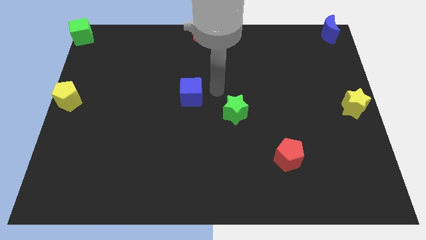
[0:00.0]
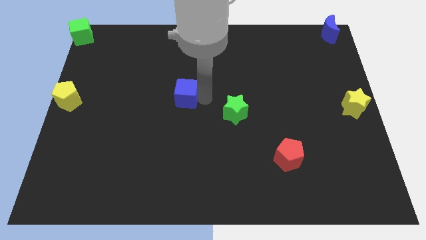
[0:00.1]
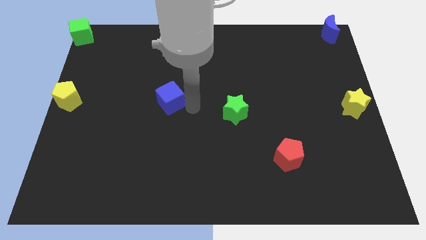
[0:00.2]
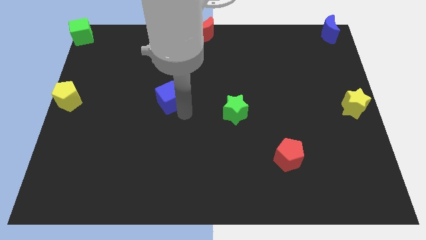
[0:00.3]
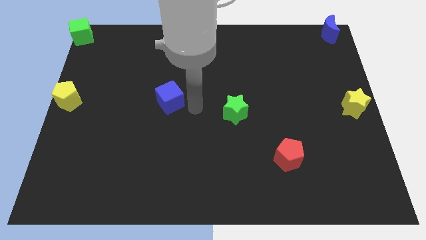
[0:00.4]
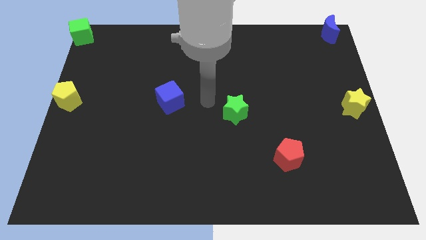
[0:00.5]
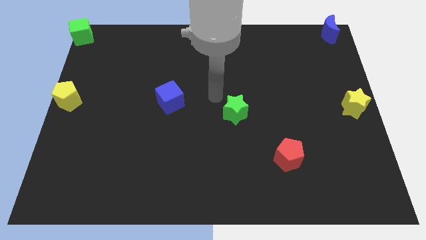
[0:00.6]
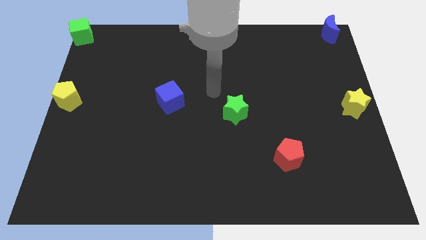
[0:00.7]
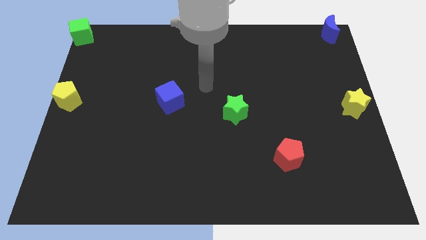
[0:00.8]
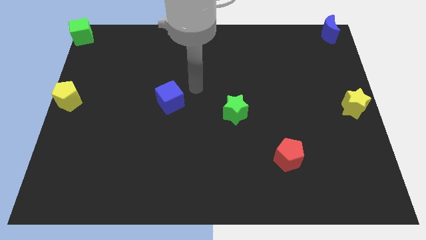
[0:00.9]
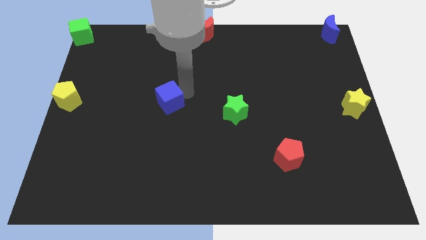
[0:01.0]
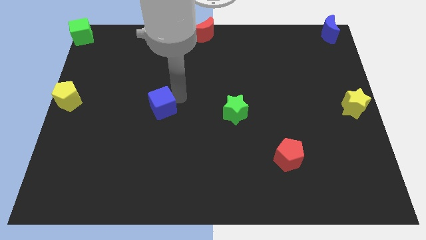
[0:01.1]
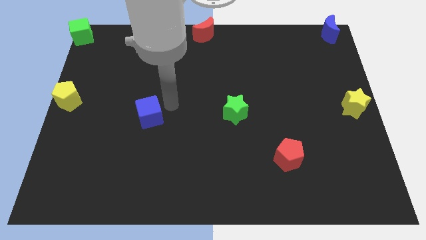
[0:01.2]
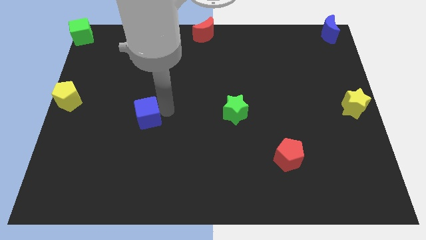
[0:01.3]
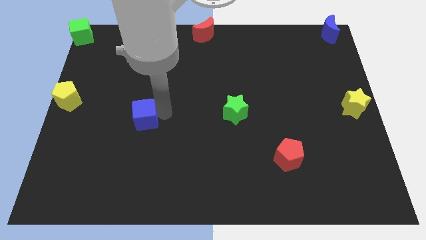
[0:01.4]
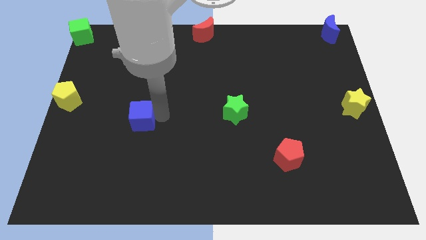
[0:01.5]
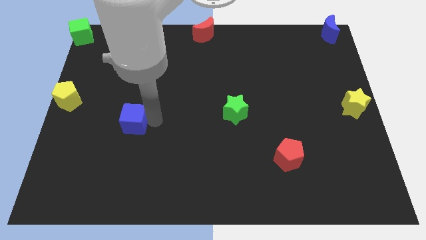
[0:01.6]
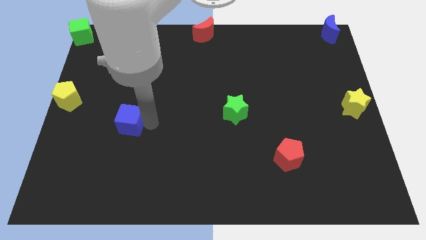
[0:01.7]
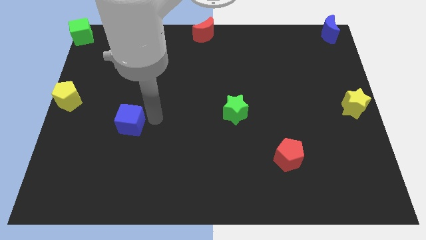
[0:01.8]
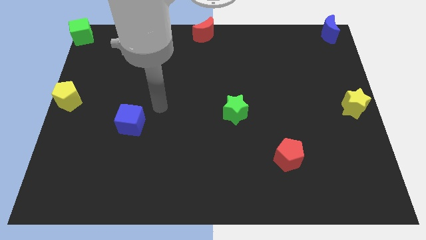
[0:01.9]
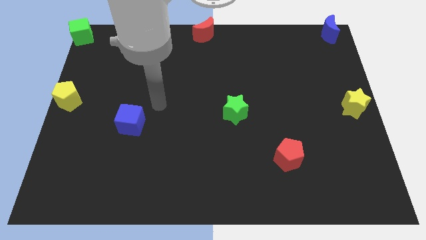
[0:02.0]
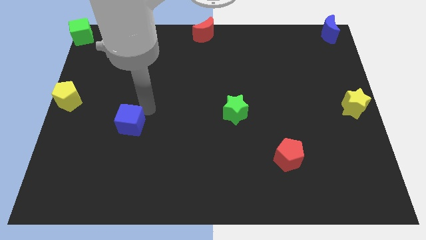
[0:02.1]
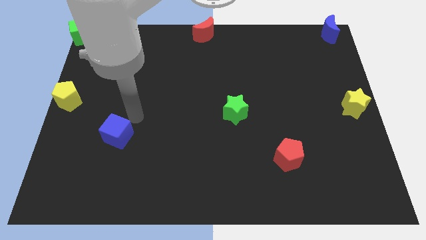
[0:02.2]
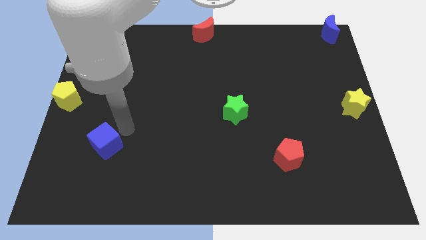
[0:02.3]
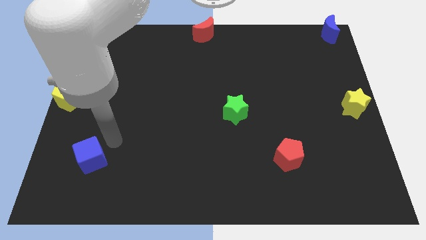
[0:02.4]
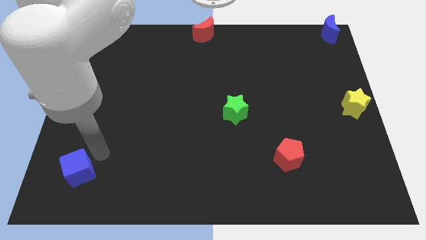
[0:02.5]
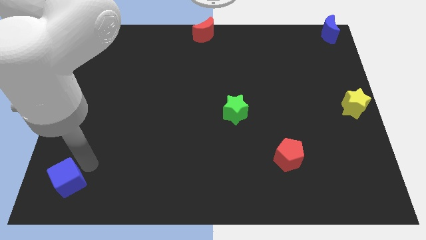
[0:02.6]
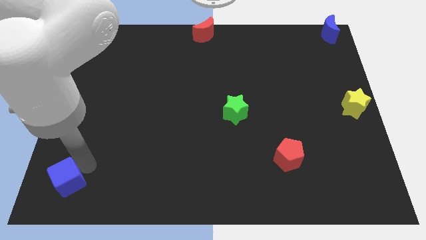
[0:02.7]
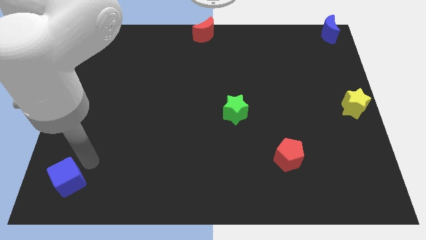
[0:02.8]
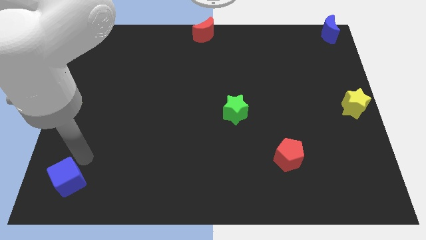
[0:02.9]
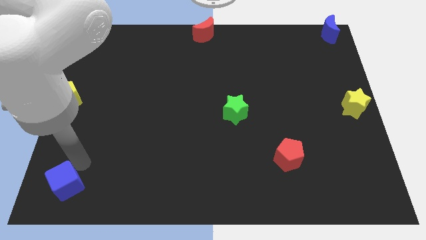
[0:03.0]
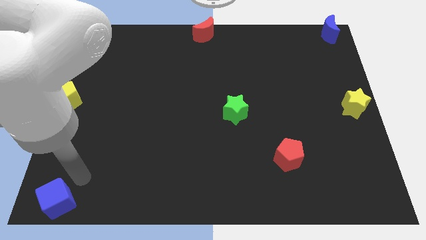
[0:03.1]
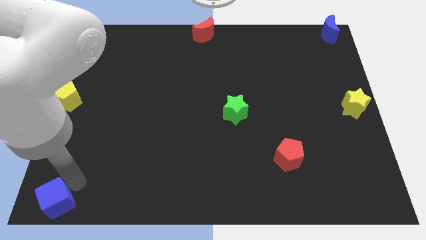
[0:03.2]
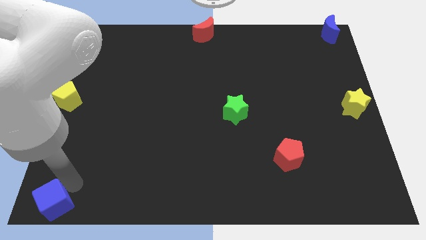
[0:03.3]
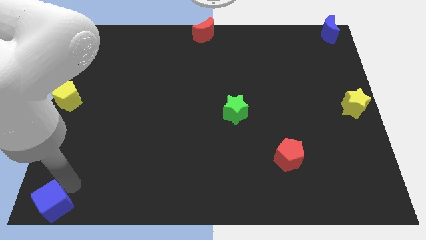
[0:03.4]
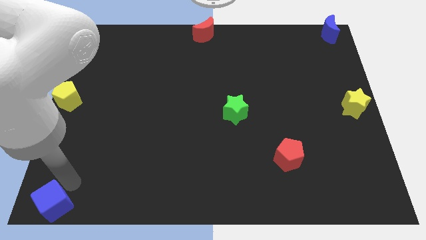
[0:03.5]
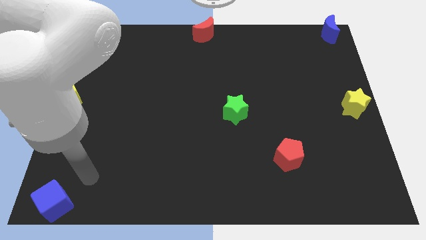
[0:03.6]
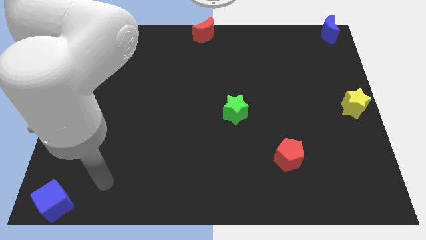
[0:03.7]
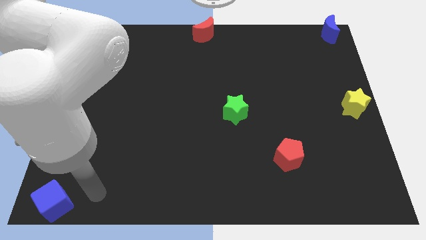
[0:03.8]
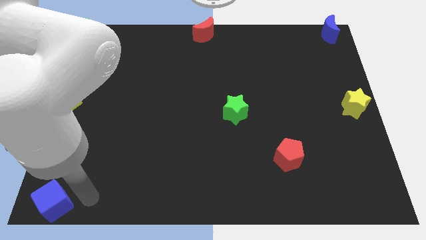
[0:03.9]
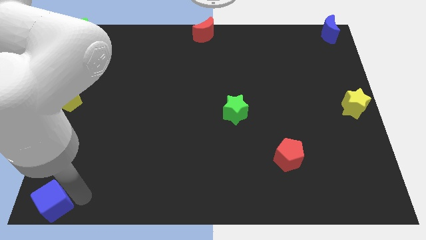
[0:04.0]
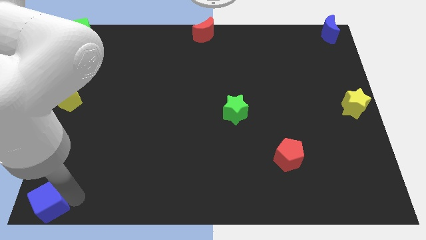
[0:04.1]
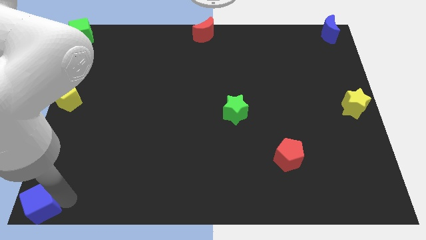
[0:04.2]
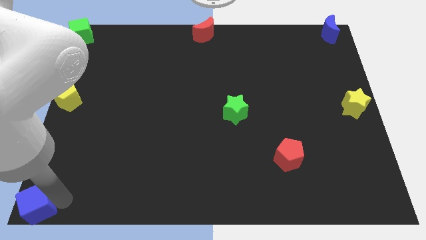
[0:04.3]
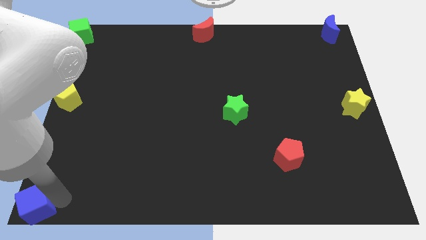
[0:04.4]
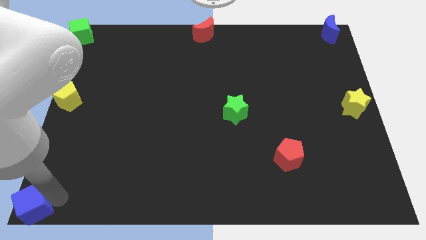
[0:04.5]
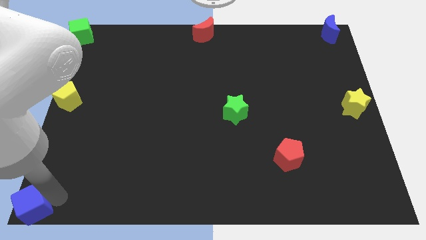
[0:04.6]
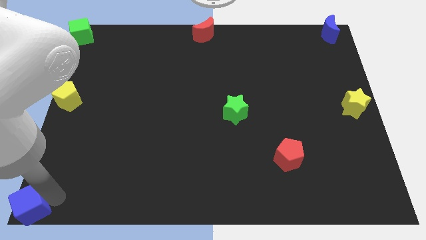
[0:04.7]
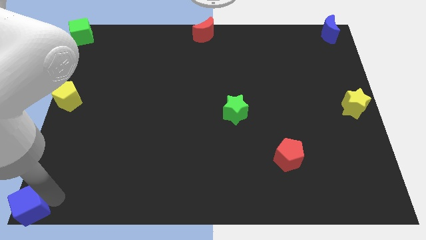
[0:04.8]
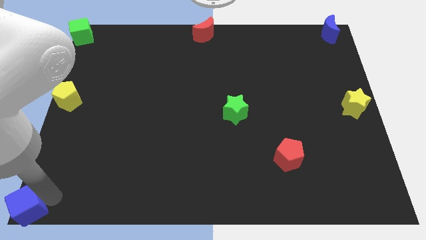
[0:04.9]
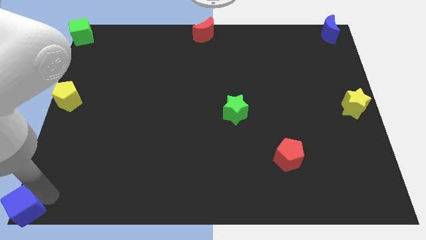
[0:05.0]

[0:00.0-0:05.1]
move blue cube to left corner of the board

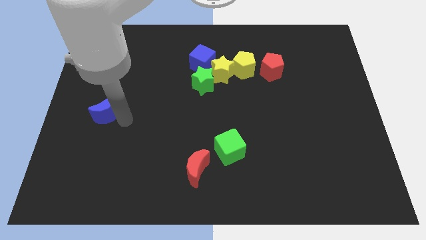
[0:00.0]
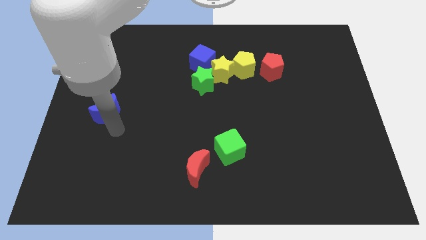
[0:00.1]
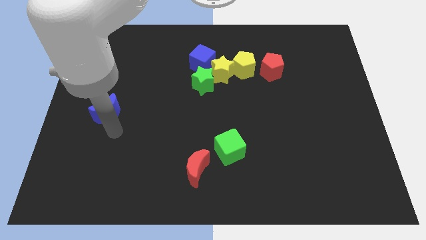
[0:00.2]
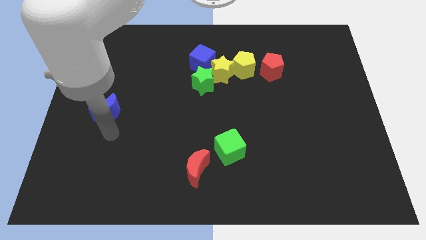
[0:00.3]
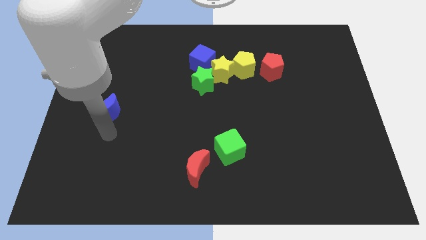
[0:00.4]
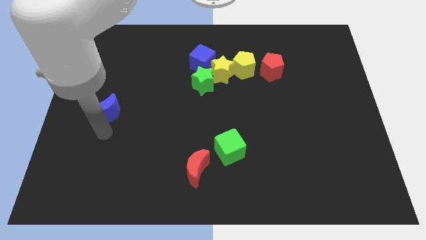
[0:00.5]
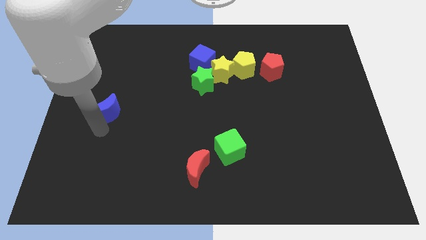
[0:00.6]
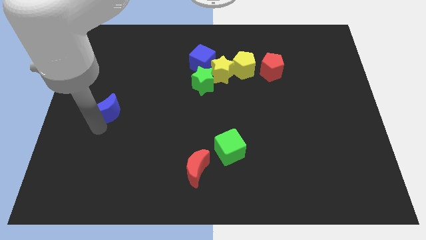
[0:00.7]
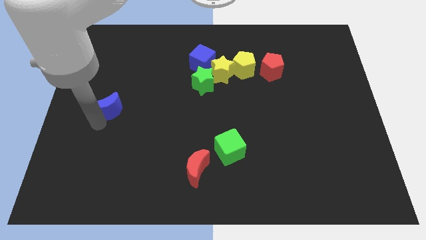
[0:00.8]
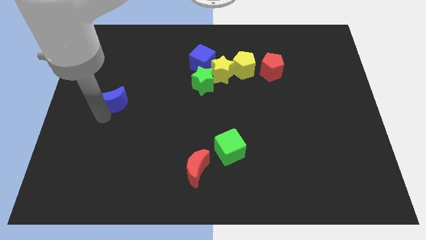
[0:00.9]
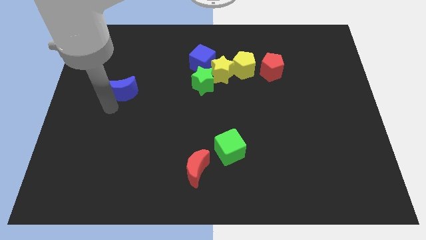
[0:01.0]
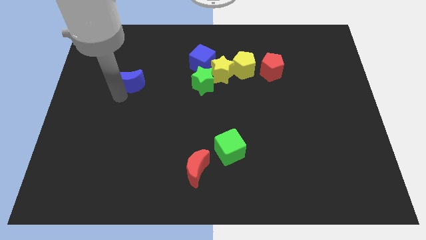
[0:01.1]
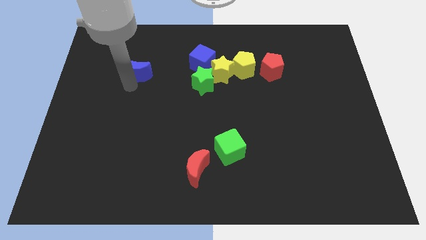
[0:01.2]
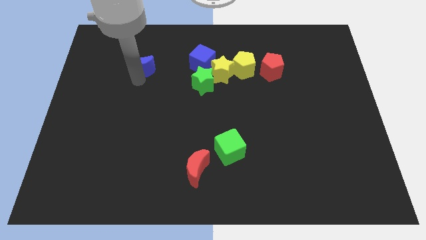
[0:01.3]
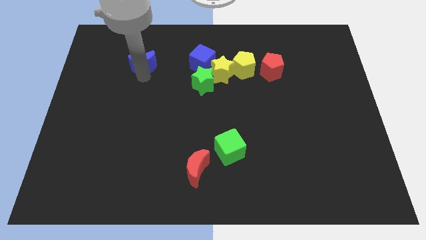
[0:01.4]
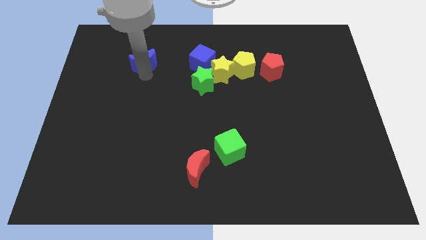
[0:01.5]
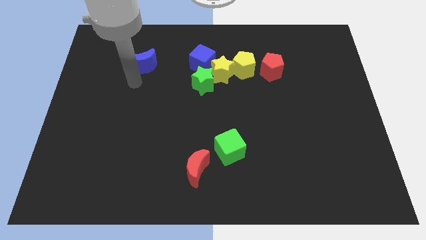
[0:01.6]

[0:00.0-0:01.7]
put the blue crescent to the left side of the blue cube

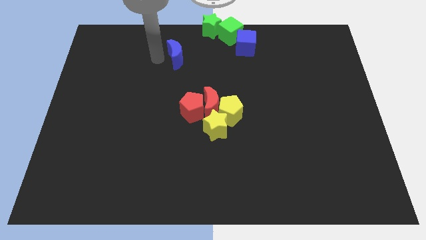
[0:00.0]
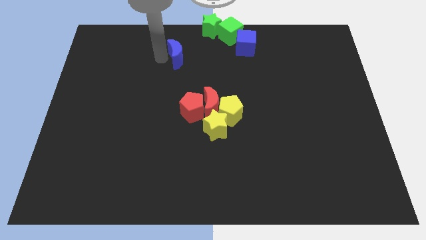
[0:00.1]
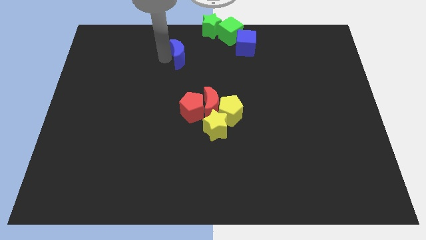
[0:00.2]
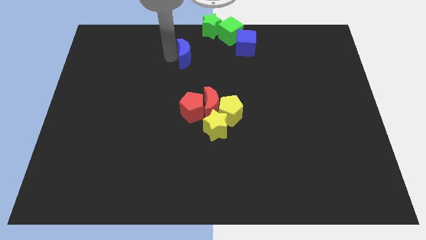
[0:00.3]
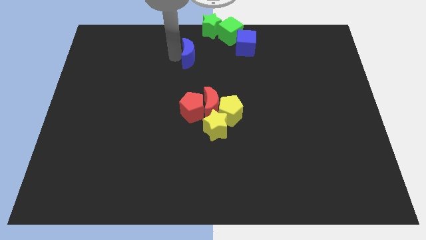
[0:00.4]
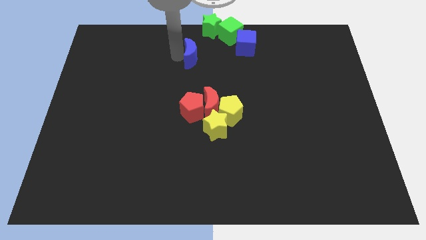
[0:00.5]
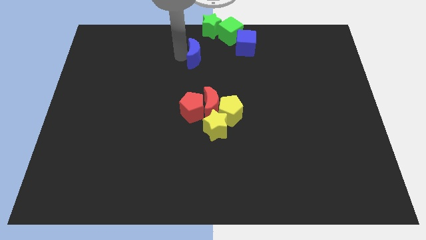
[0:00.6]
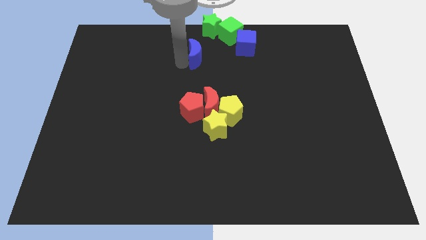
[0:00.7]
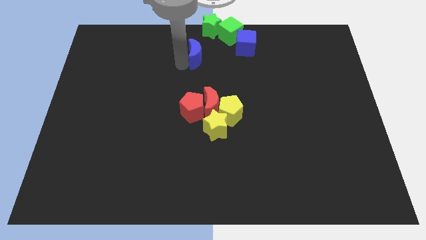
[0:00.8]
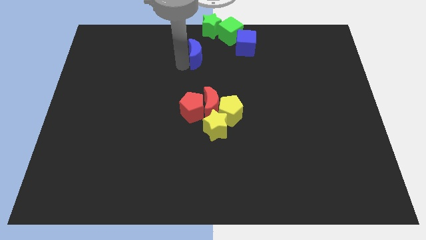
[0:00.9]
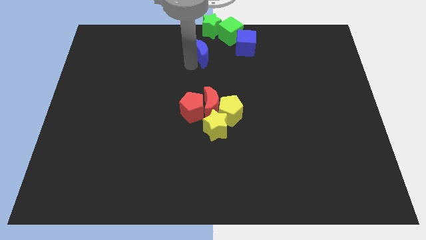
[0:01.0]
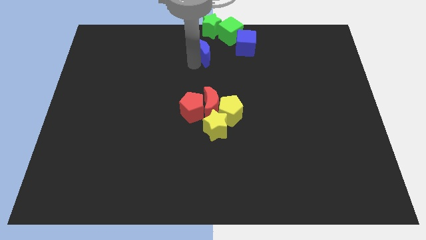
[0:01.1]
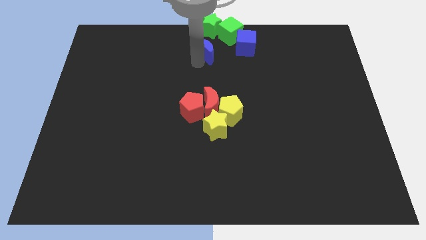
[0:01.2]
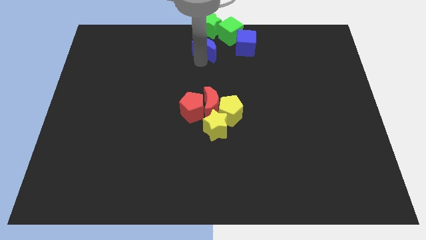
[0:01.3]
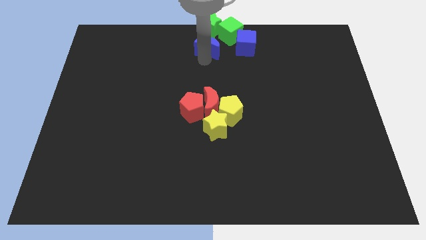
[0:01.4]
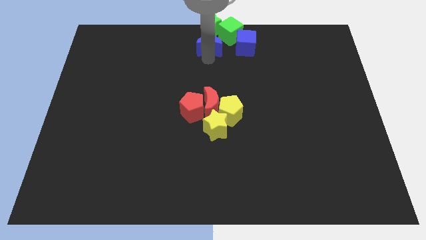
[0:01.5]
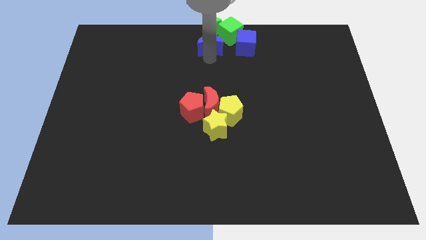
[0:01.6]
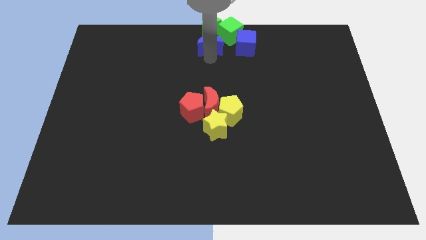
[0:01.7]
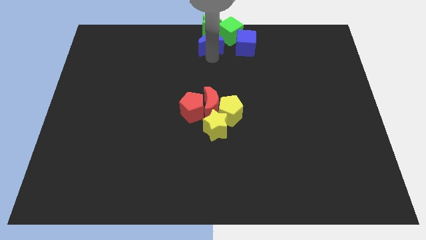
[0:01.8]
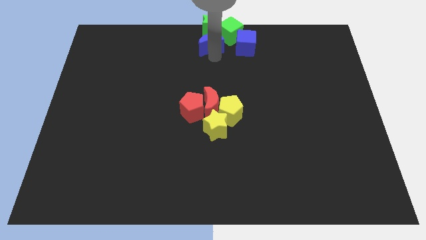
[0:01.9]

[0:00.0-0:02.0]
push the blue crescent below the green star

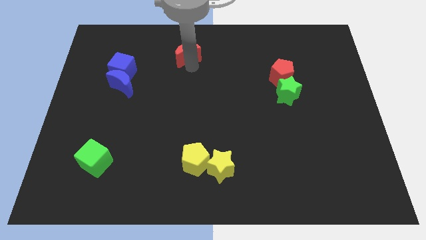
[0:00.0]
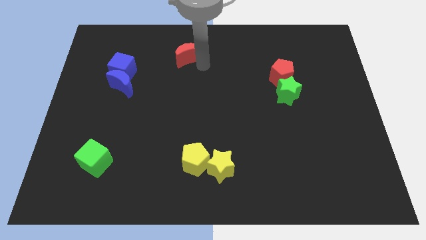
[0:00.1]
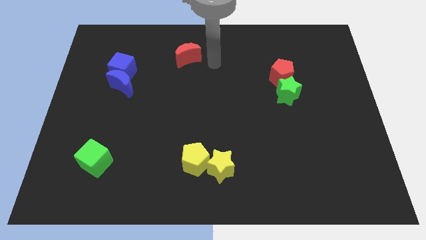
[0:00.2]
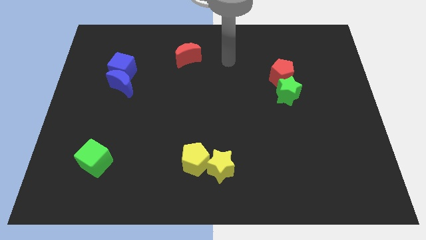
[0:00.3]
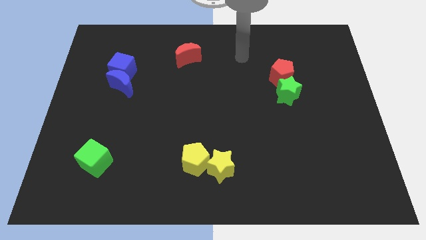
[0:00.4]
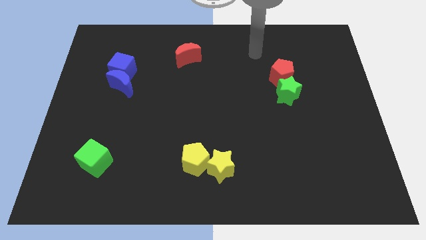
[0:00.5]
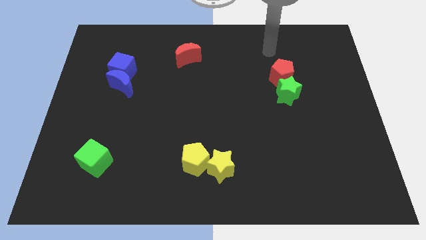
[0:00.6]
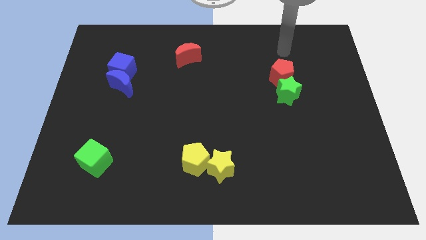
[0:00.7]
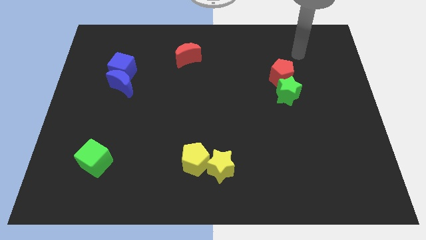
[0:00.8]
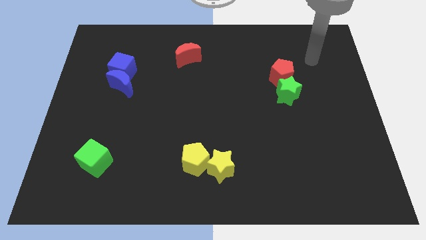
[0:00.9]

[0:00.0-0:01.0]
move your arm away from red moon
